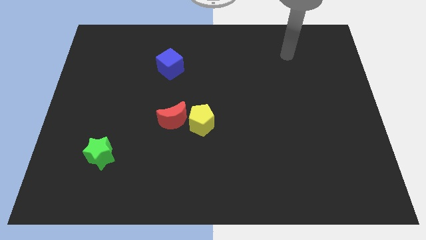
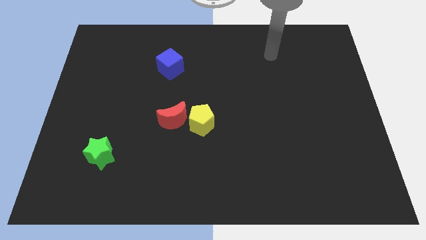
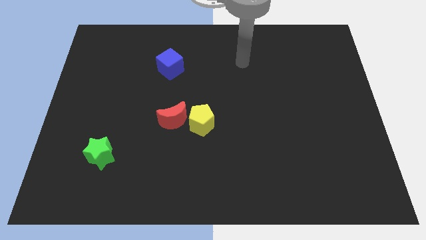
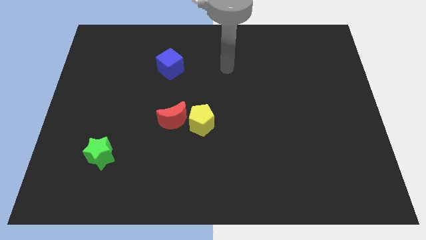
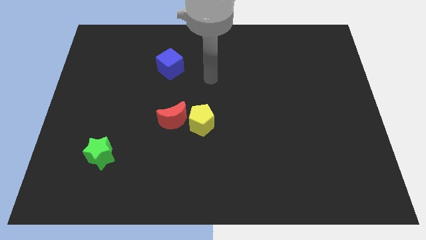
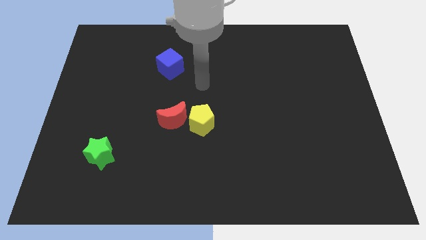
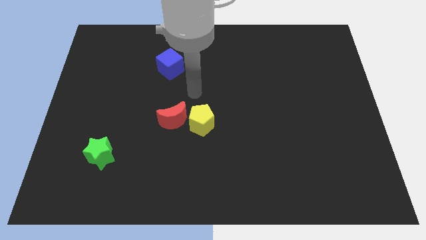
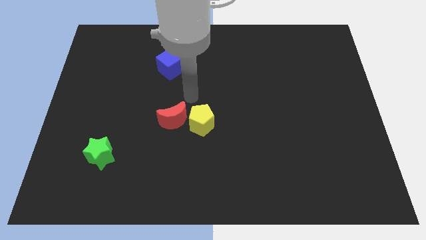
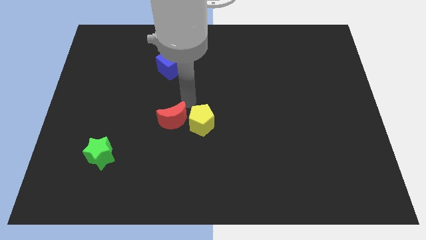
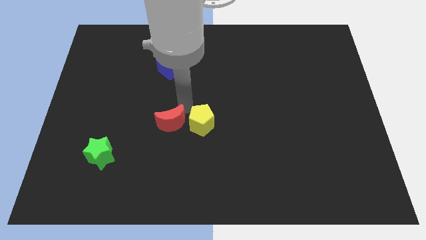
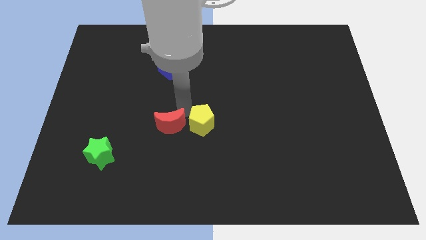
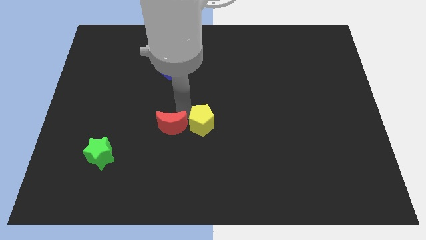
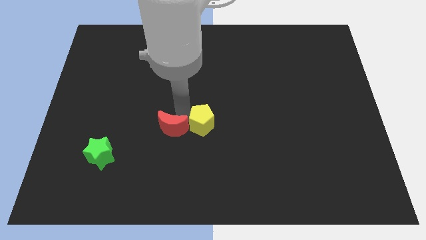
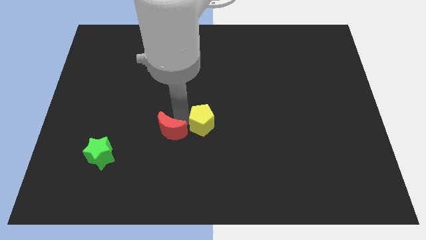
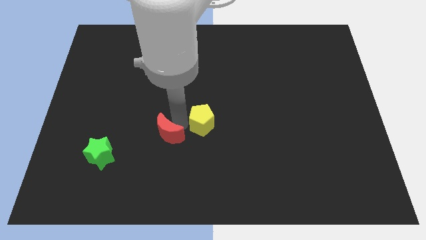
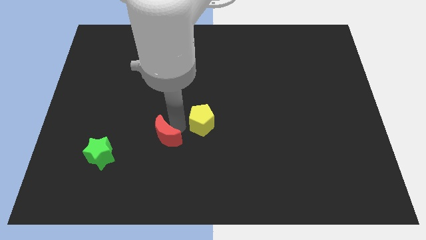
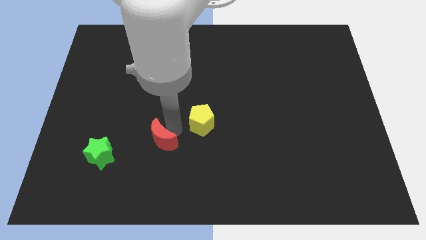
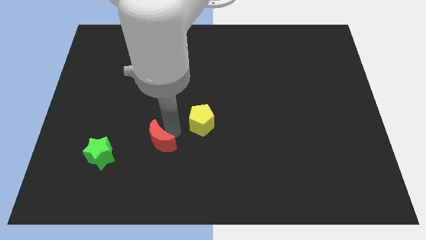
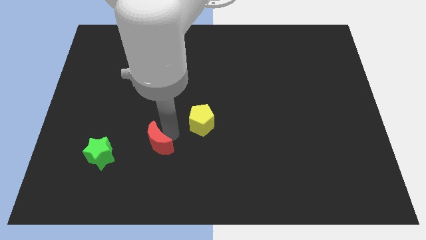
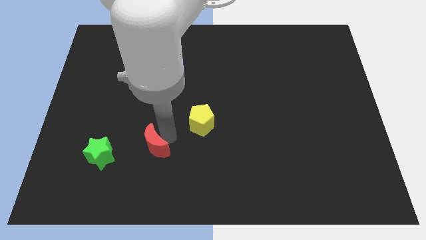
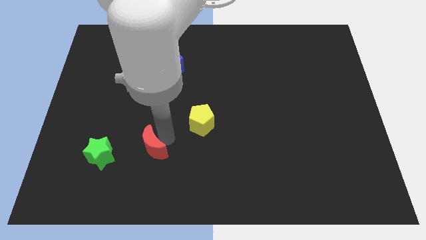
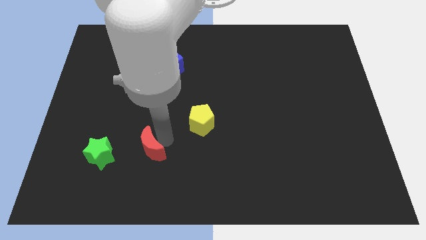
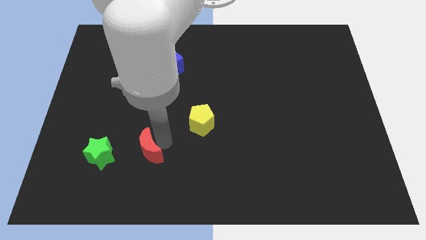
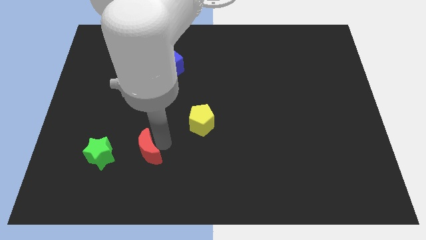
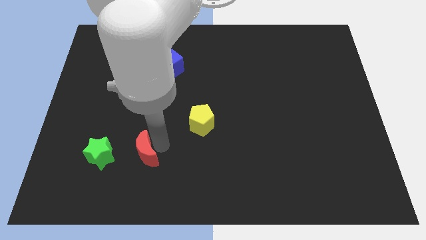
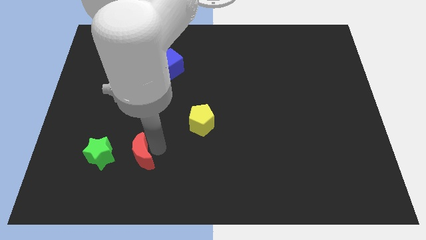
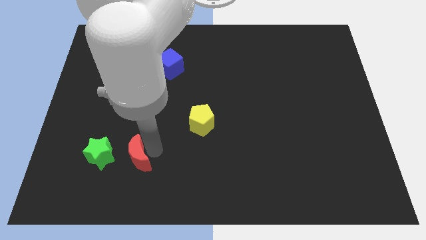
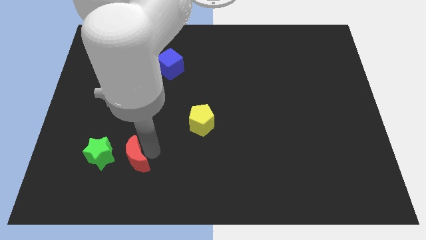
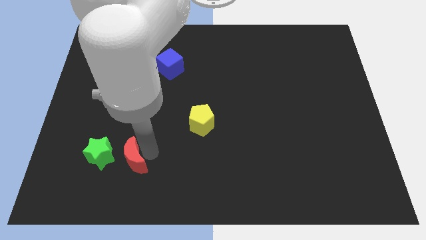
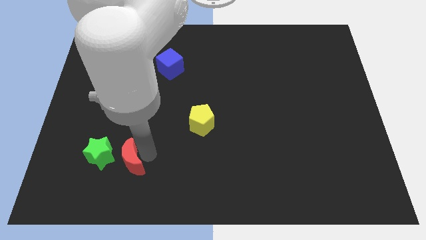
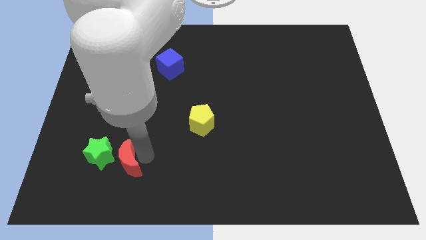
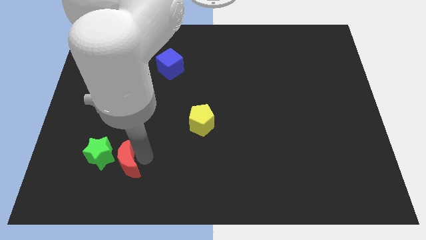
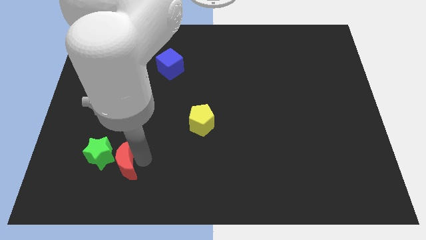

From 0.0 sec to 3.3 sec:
move the red moon close to the star

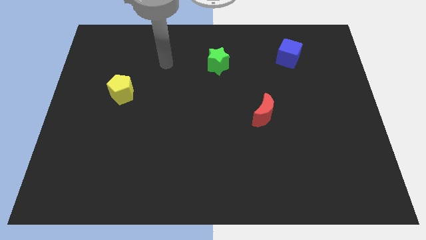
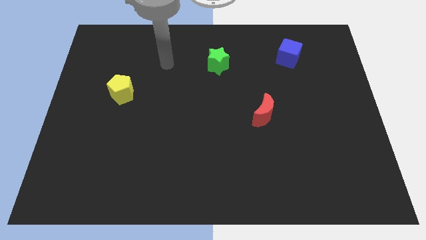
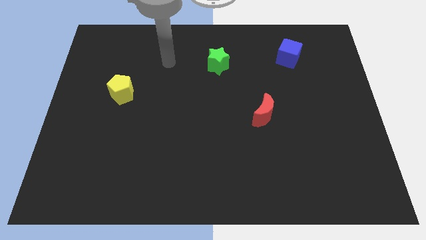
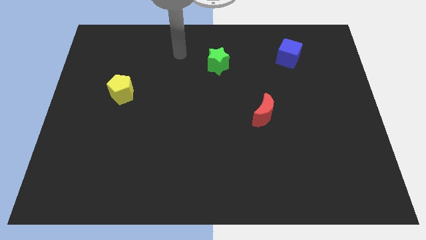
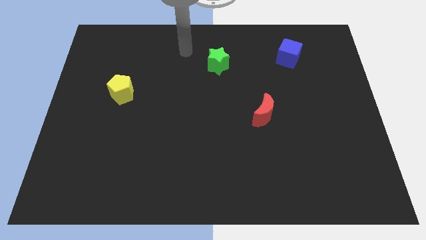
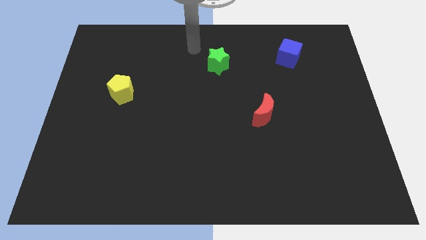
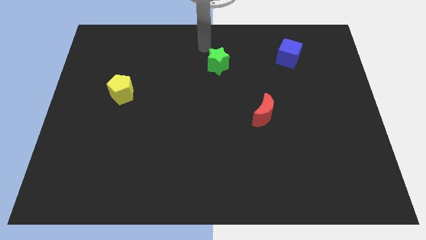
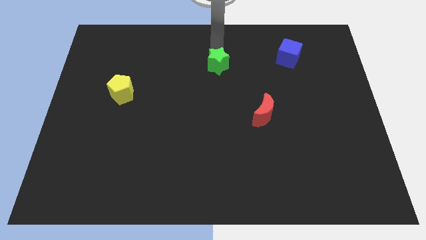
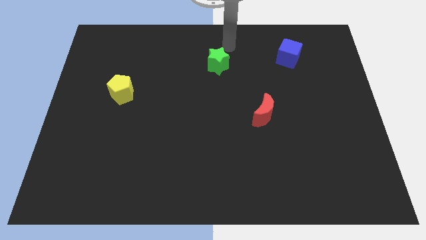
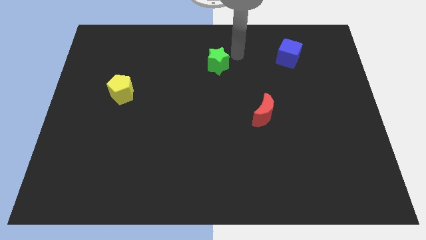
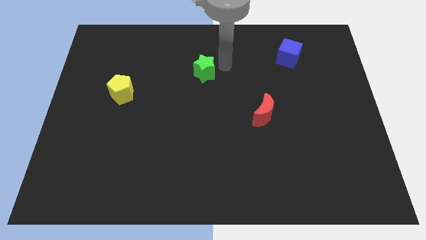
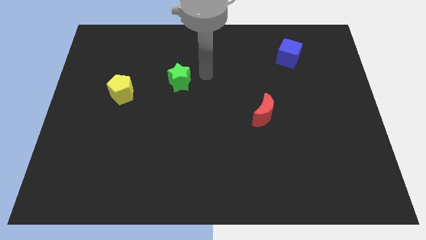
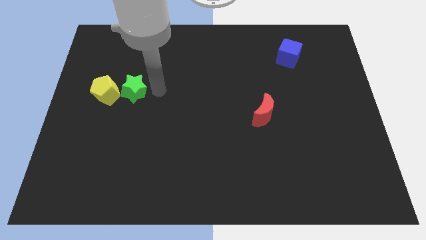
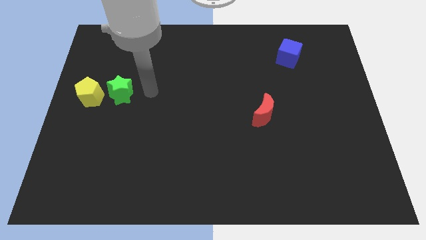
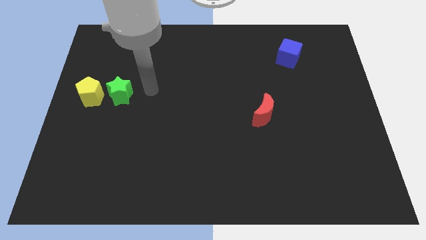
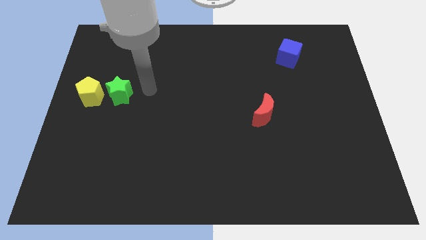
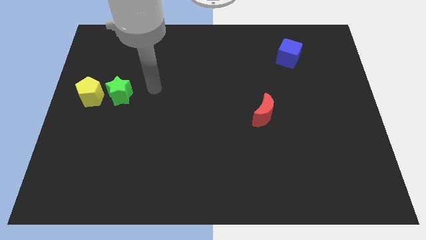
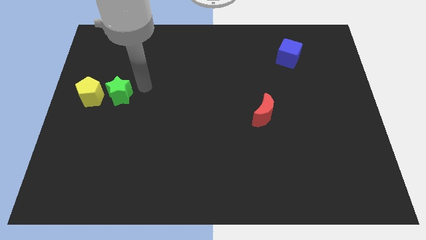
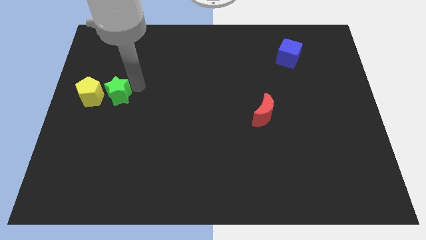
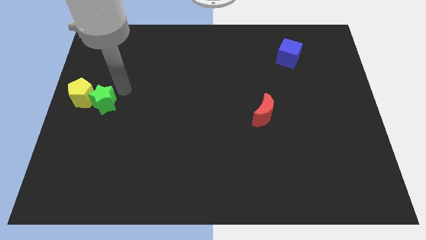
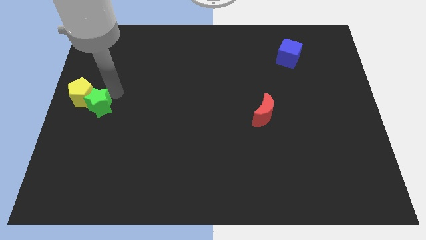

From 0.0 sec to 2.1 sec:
move the star close to the pentagon

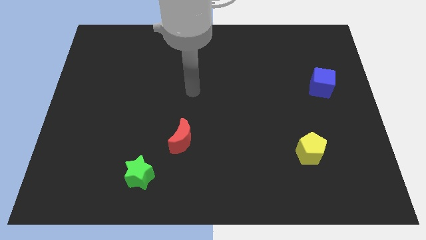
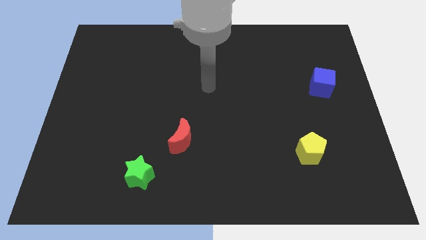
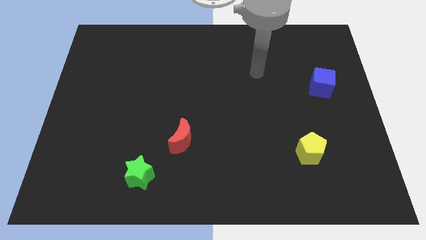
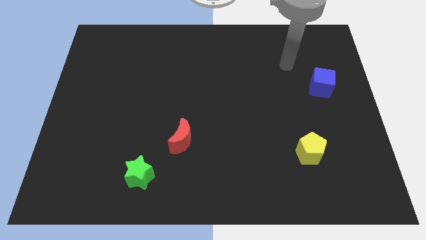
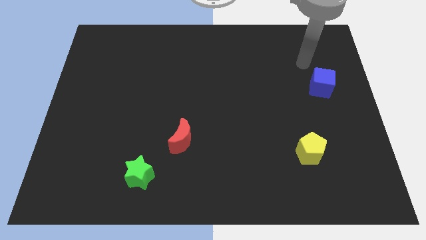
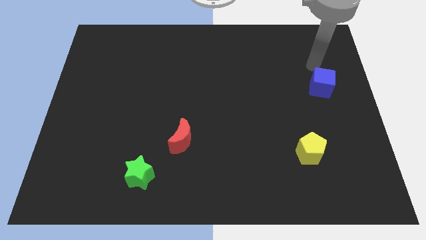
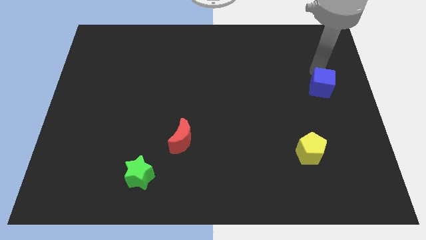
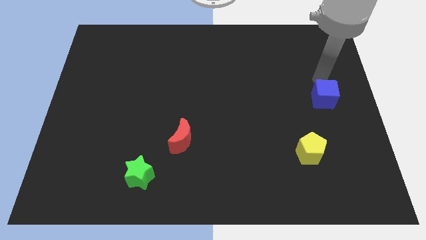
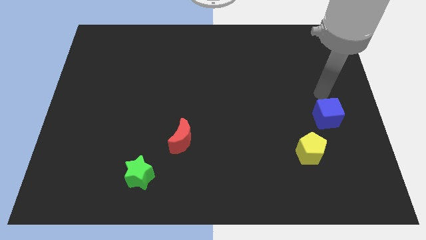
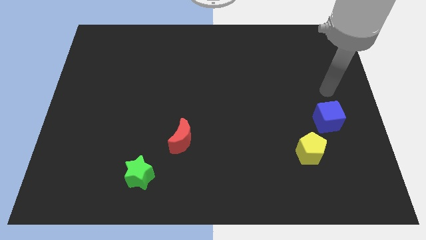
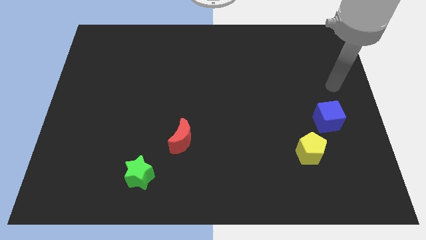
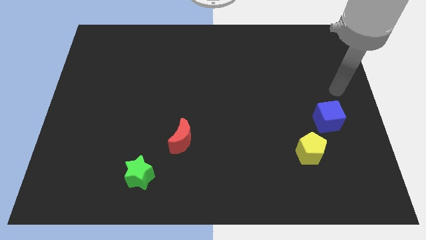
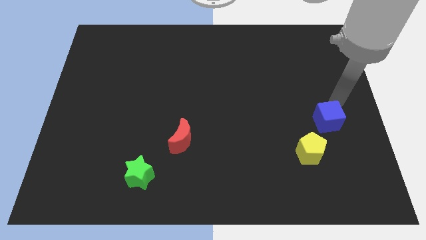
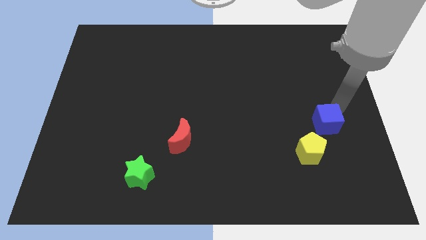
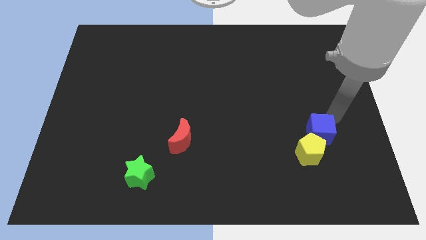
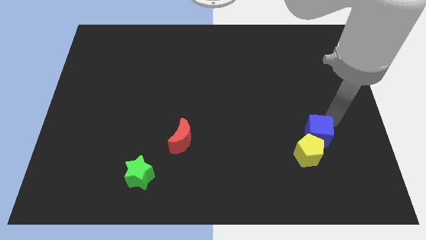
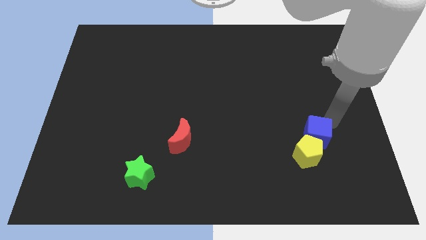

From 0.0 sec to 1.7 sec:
move the cube next to the yellow block

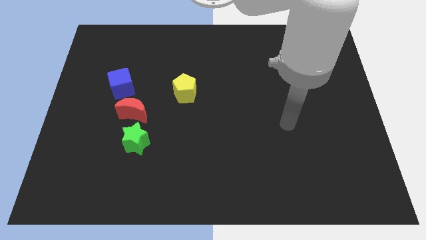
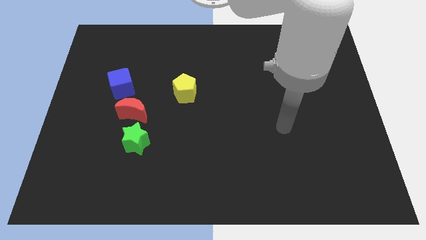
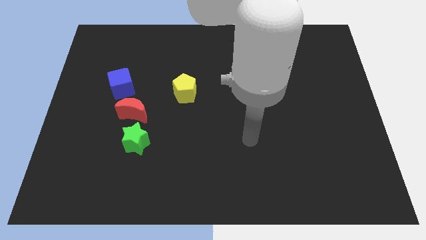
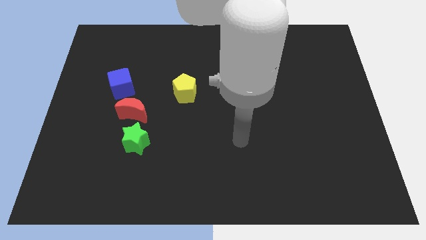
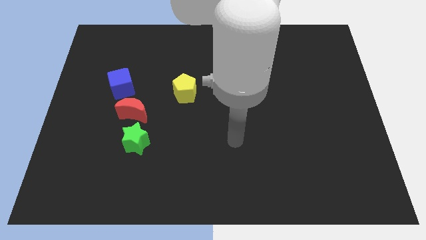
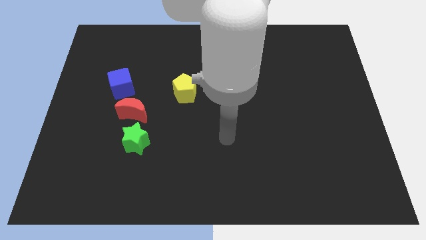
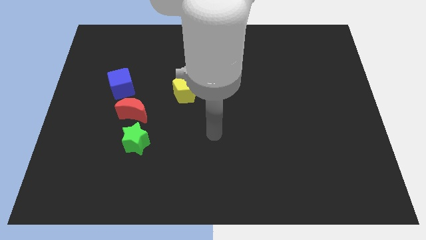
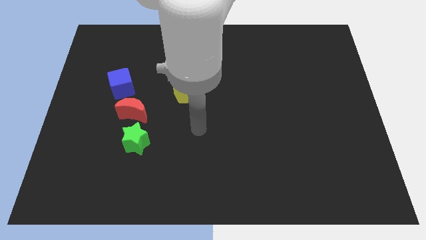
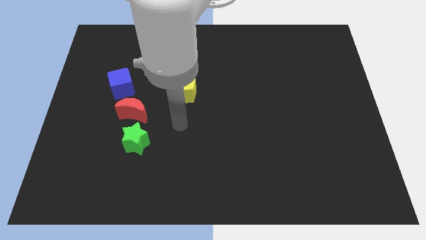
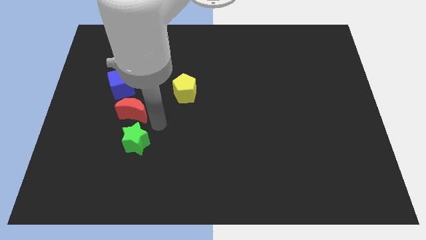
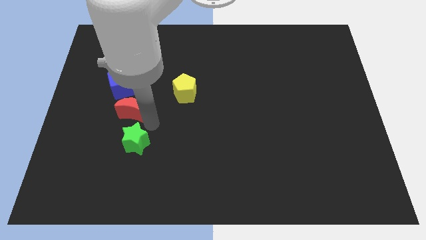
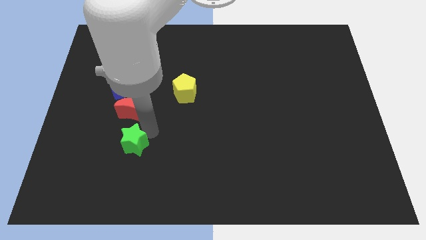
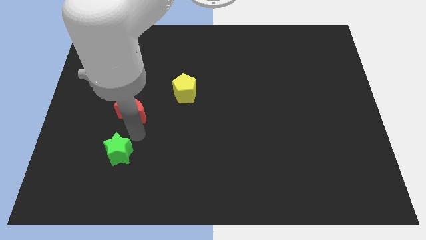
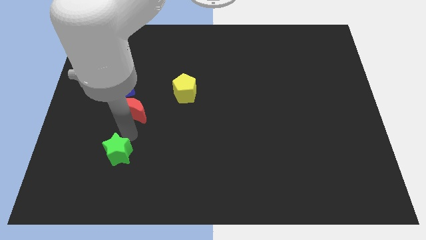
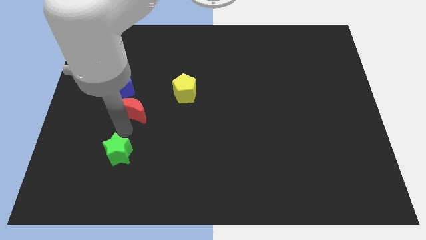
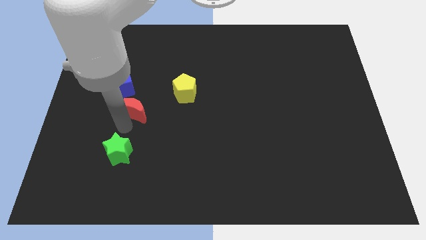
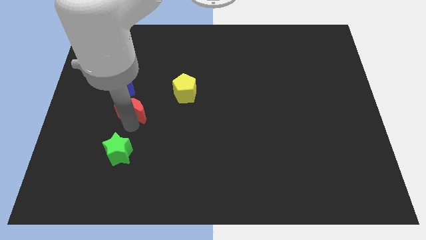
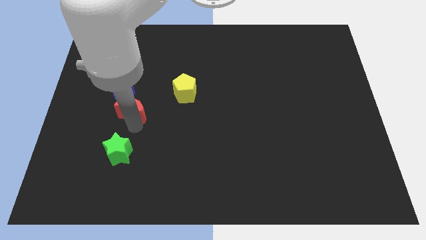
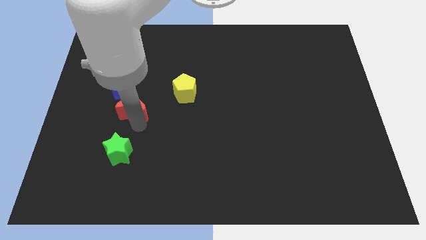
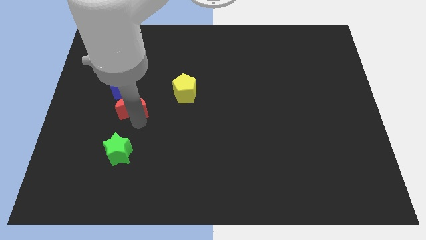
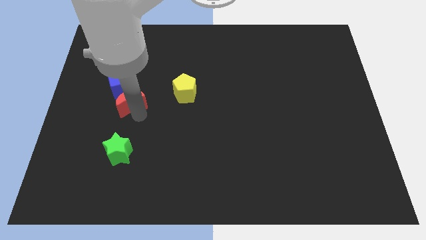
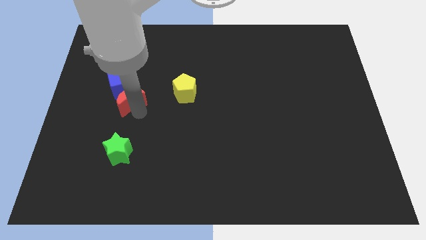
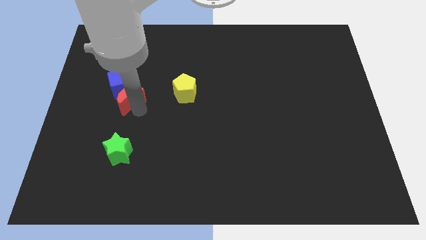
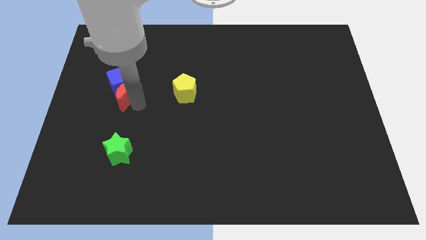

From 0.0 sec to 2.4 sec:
move the red block to the cube
